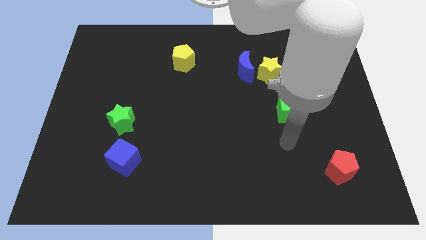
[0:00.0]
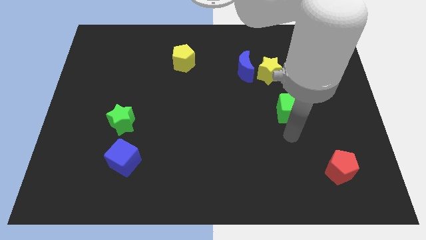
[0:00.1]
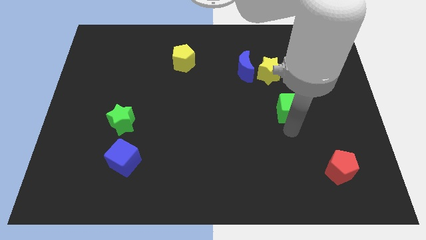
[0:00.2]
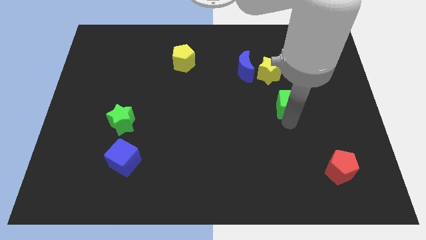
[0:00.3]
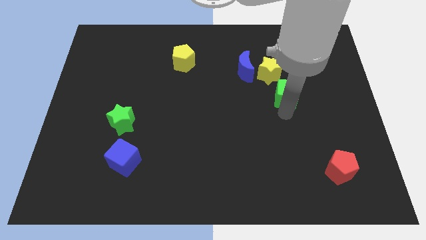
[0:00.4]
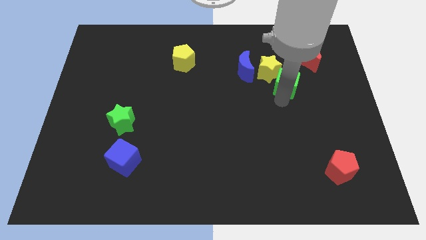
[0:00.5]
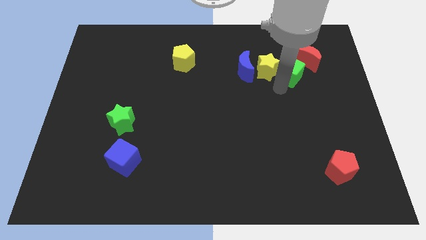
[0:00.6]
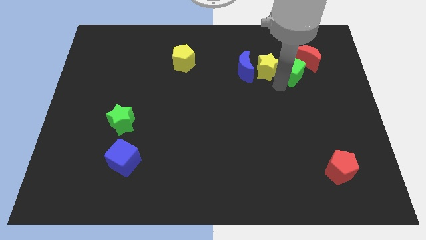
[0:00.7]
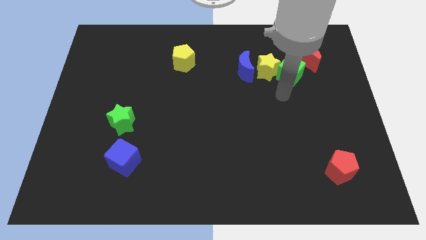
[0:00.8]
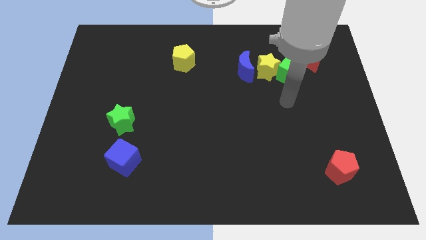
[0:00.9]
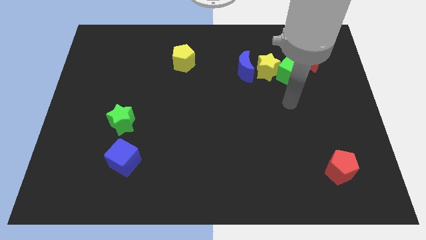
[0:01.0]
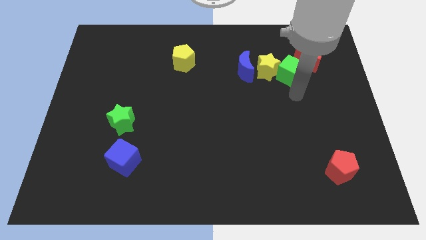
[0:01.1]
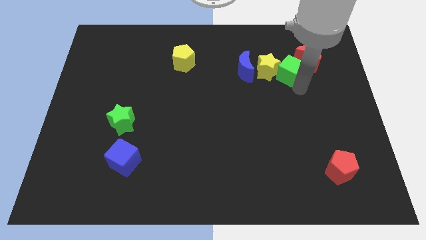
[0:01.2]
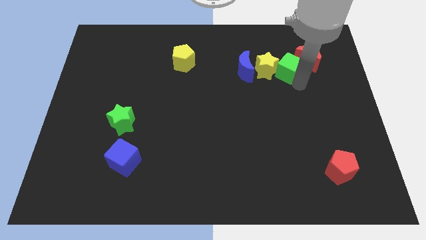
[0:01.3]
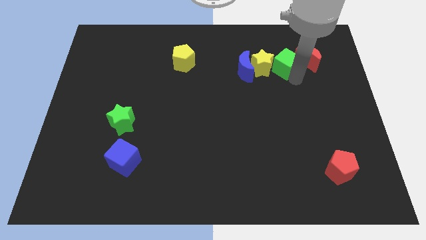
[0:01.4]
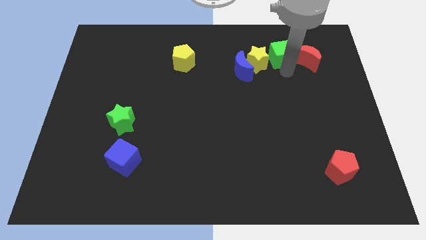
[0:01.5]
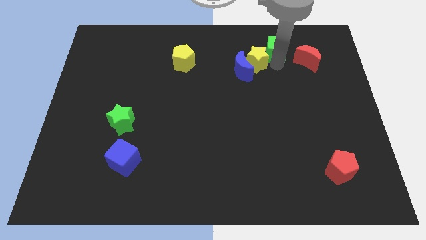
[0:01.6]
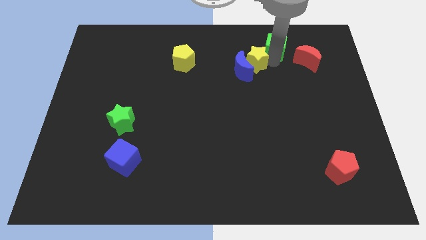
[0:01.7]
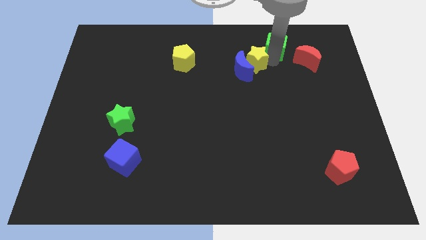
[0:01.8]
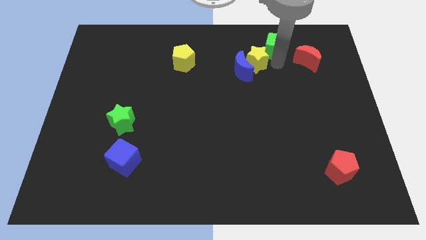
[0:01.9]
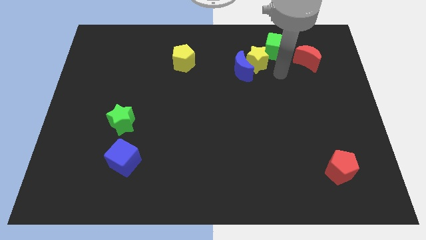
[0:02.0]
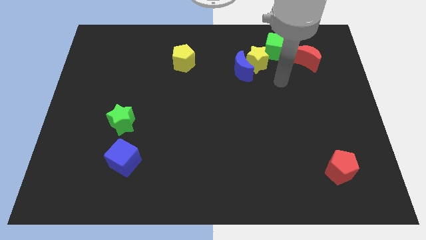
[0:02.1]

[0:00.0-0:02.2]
move the green cube between the yellow star red crescent

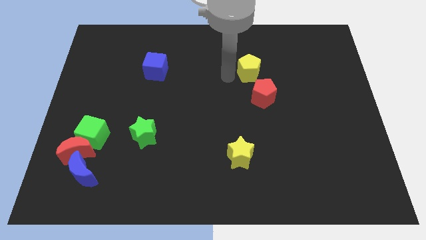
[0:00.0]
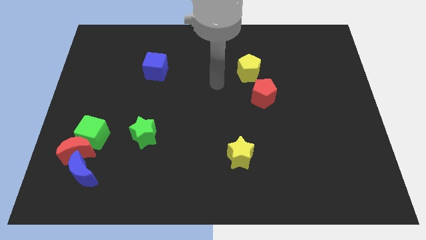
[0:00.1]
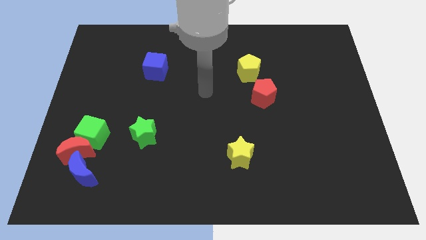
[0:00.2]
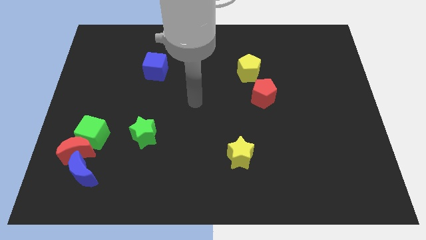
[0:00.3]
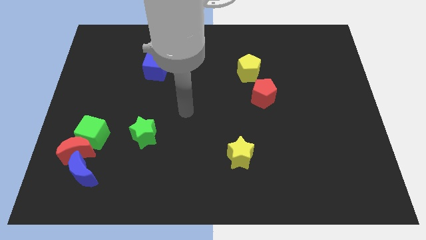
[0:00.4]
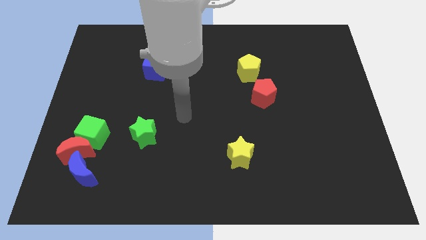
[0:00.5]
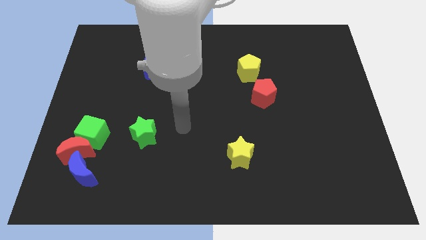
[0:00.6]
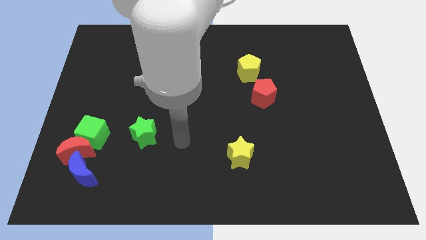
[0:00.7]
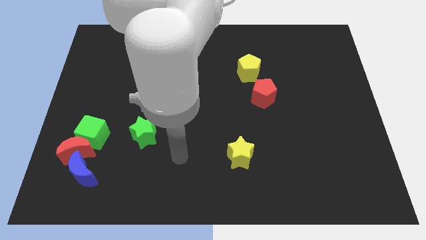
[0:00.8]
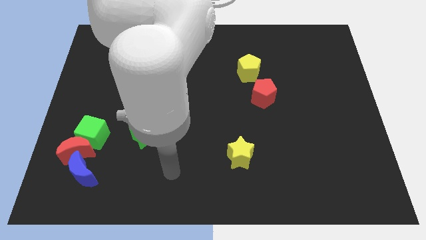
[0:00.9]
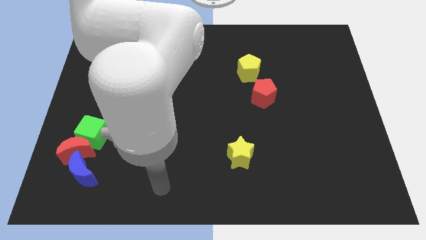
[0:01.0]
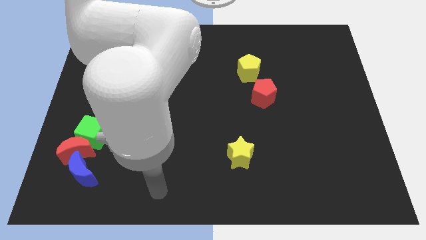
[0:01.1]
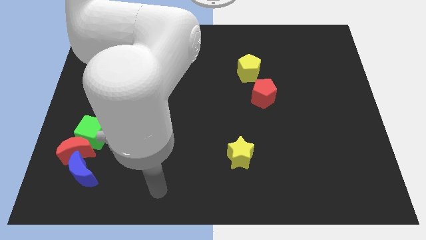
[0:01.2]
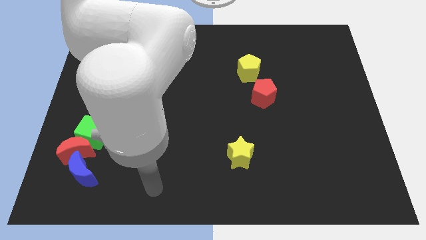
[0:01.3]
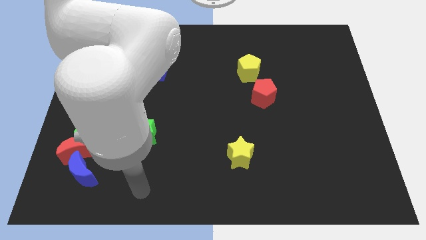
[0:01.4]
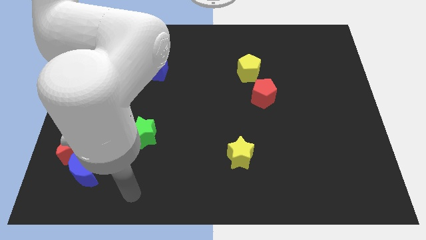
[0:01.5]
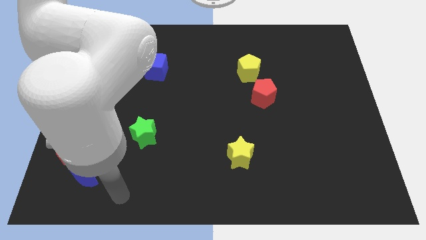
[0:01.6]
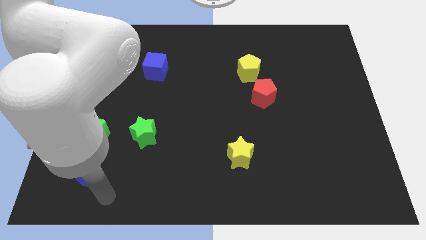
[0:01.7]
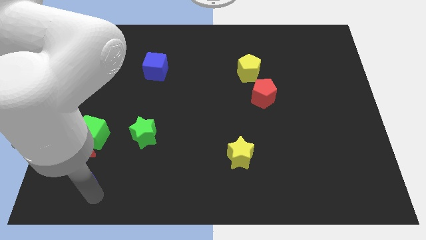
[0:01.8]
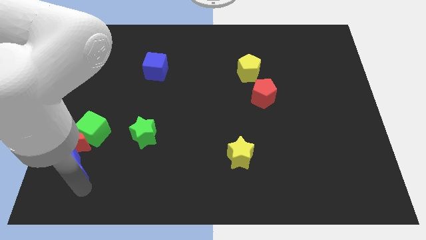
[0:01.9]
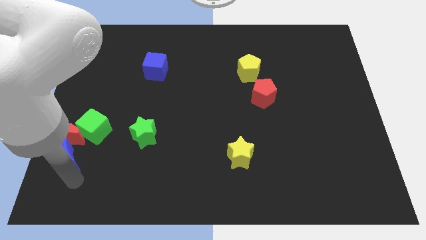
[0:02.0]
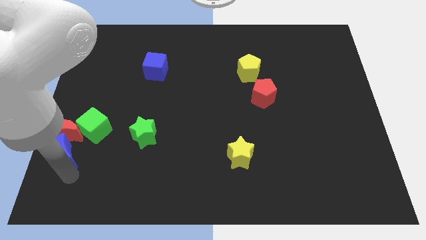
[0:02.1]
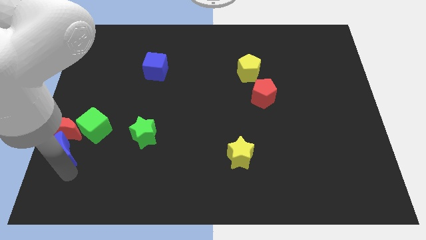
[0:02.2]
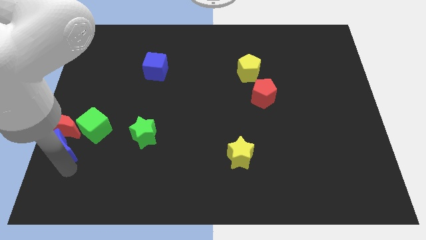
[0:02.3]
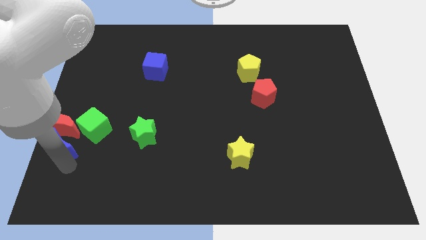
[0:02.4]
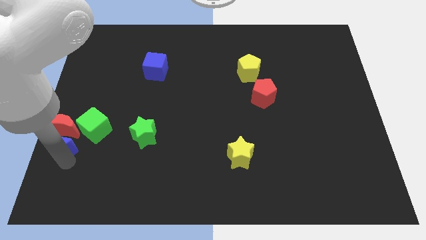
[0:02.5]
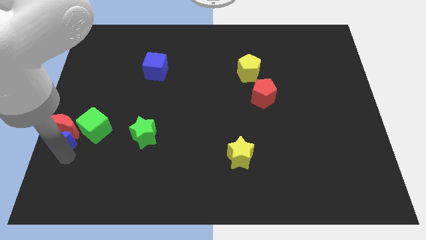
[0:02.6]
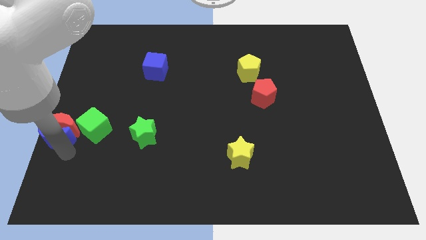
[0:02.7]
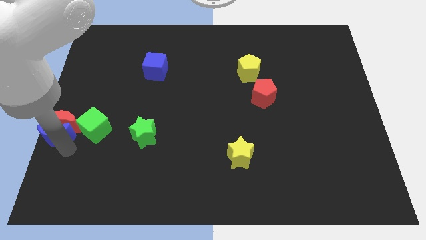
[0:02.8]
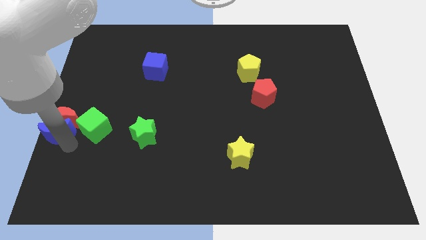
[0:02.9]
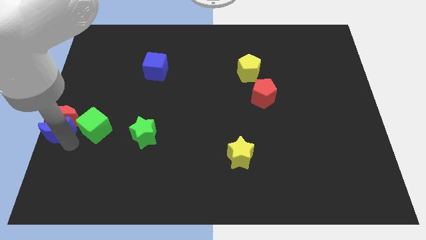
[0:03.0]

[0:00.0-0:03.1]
push the blue and red crescents to the left of the green cube

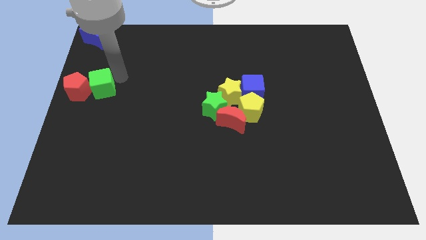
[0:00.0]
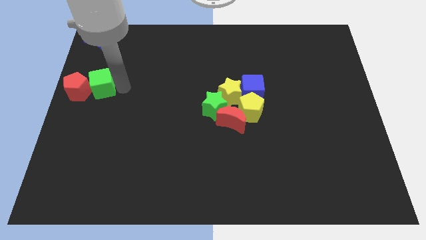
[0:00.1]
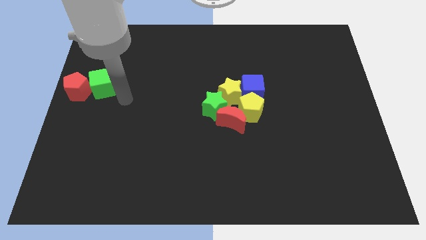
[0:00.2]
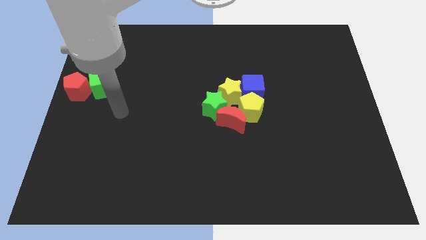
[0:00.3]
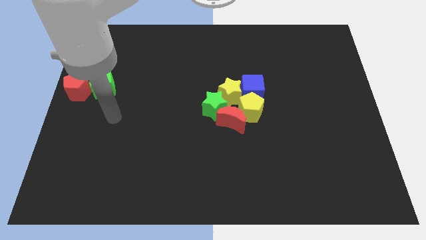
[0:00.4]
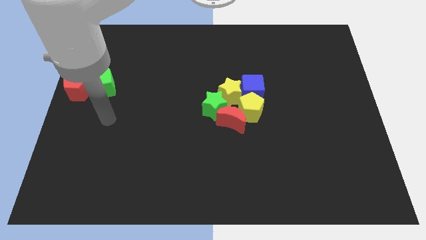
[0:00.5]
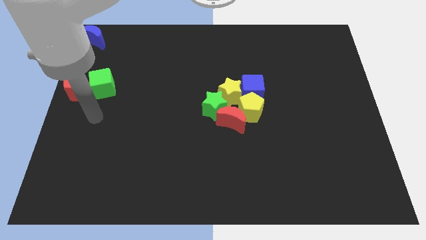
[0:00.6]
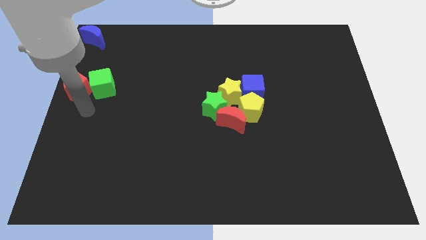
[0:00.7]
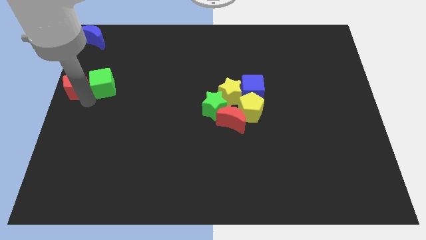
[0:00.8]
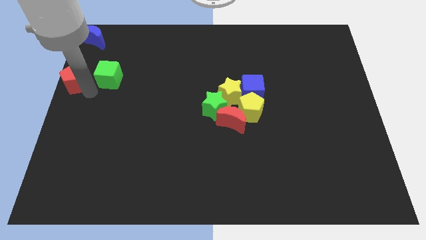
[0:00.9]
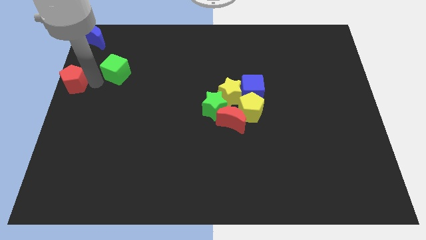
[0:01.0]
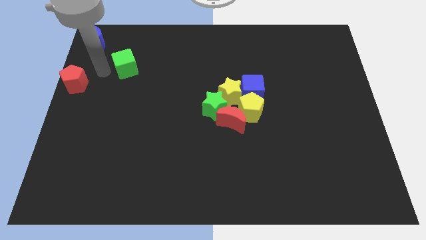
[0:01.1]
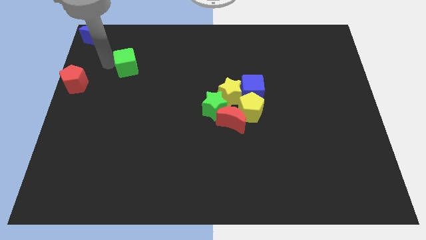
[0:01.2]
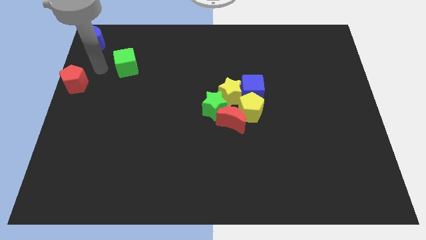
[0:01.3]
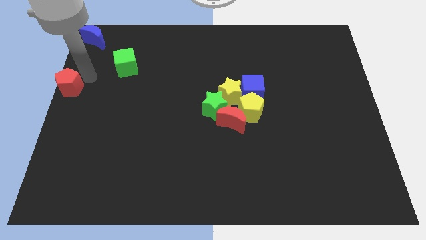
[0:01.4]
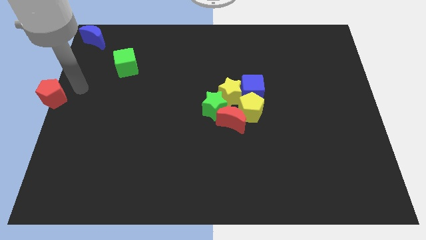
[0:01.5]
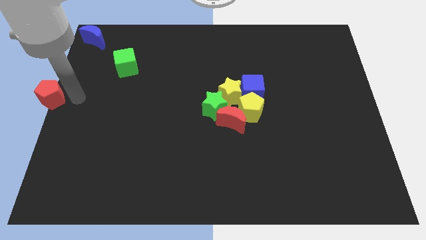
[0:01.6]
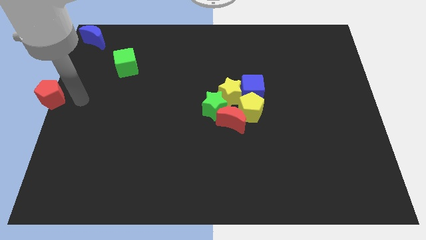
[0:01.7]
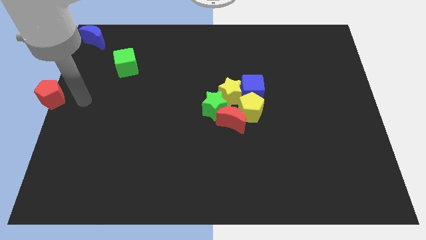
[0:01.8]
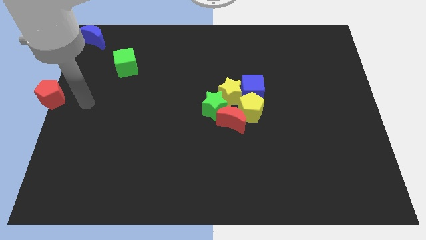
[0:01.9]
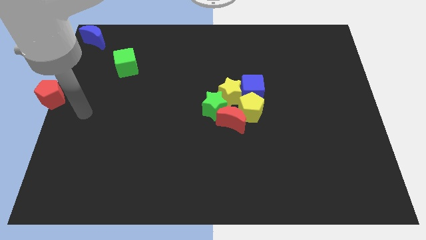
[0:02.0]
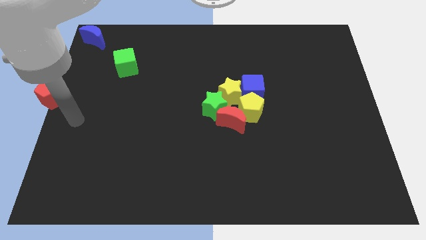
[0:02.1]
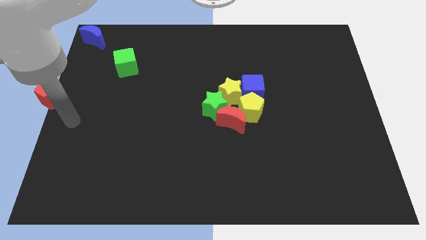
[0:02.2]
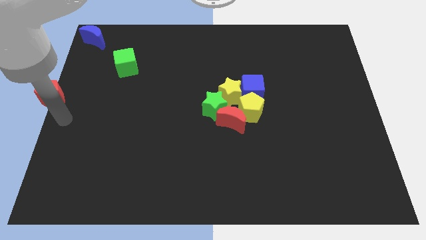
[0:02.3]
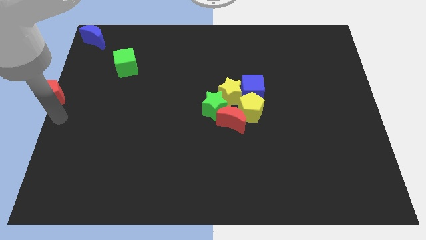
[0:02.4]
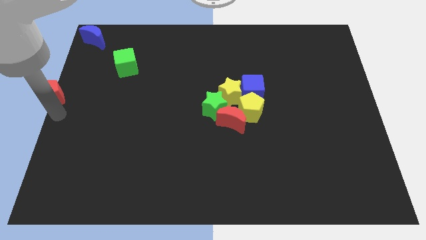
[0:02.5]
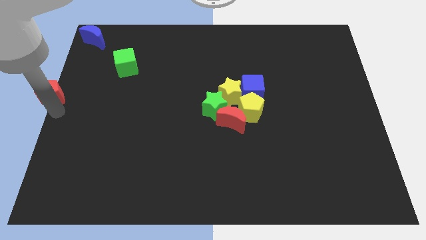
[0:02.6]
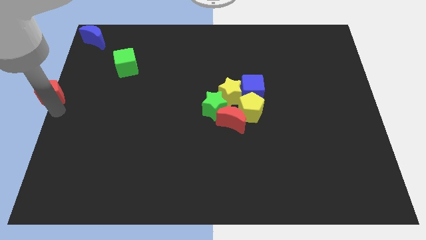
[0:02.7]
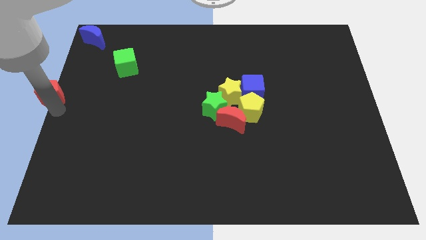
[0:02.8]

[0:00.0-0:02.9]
separate the red pentagon and green cube

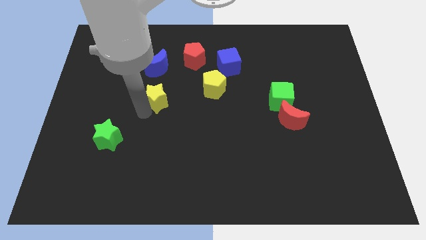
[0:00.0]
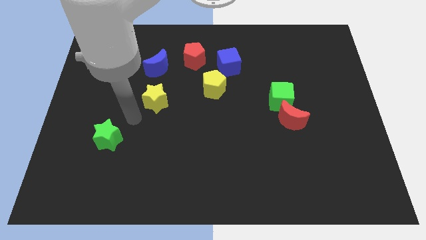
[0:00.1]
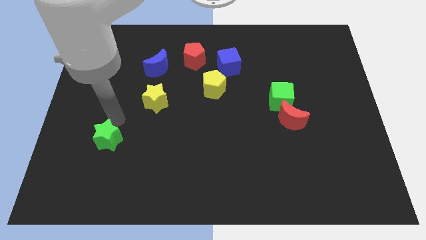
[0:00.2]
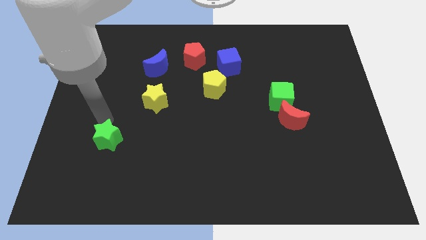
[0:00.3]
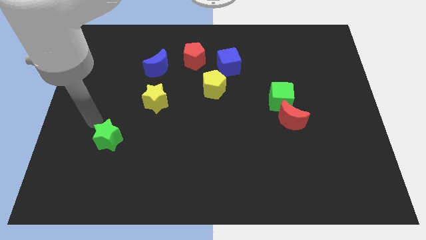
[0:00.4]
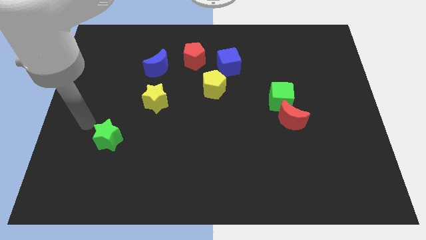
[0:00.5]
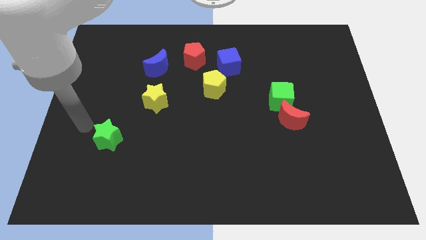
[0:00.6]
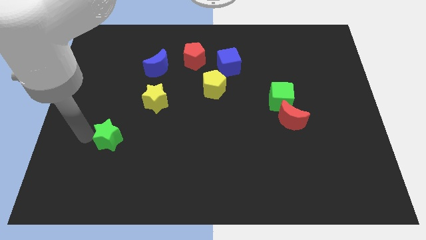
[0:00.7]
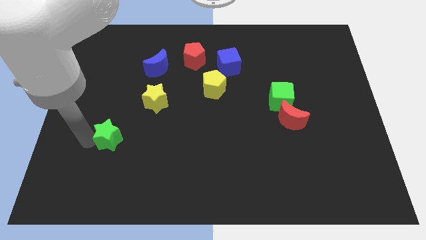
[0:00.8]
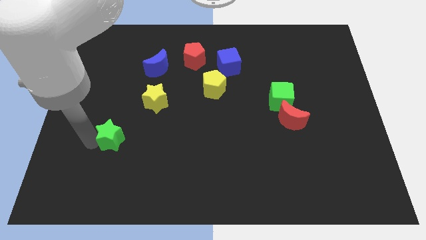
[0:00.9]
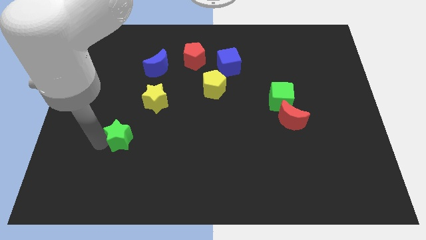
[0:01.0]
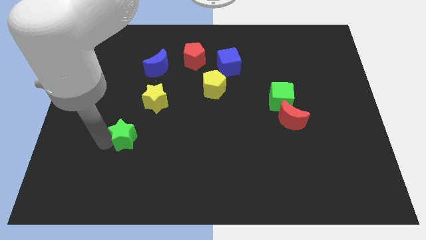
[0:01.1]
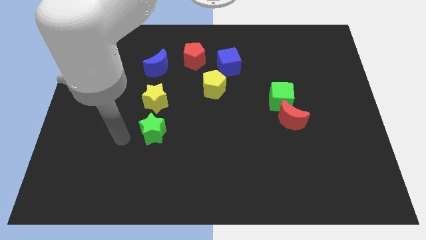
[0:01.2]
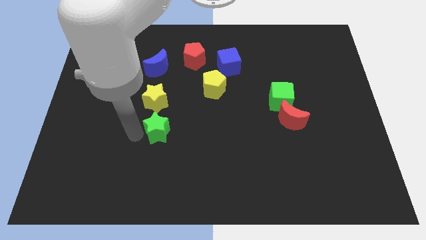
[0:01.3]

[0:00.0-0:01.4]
place the green star below the yellow star
